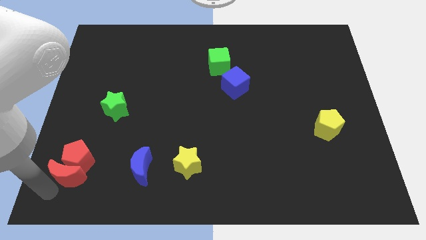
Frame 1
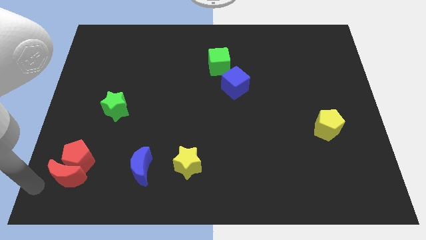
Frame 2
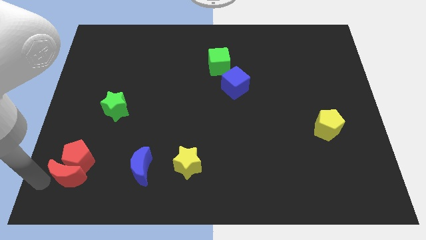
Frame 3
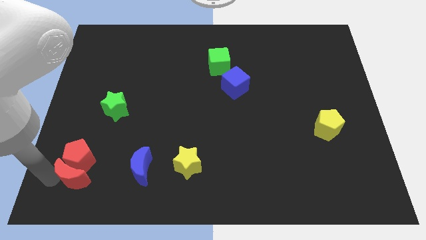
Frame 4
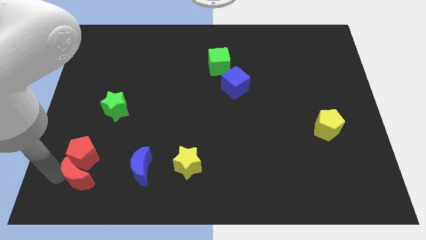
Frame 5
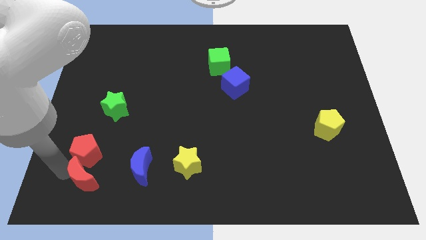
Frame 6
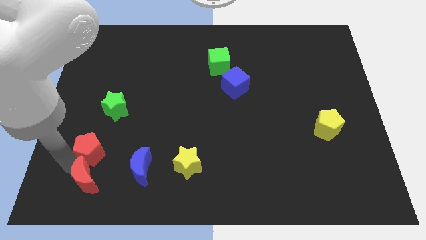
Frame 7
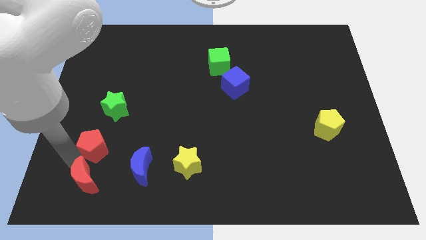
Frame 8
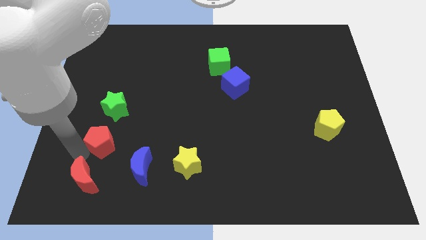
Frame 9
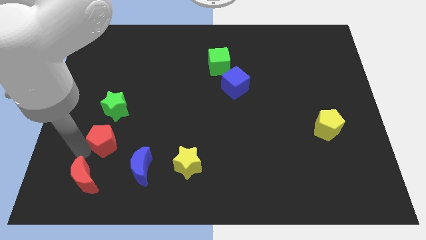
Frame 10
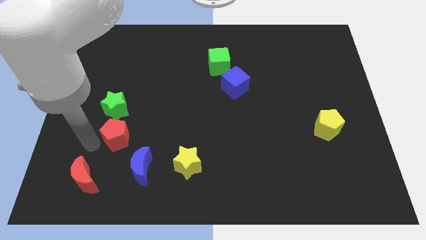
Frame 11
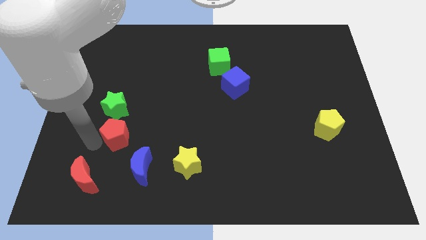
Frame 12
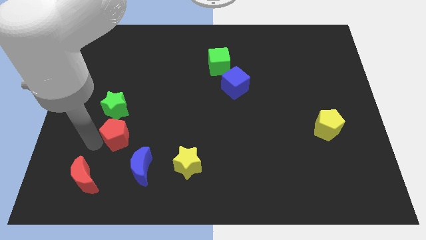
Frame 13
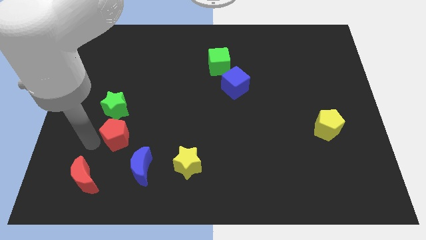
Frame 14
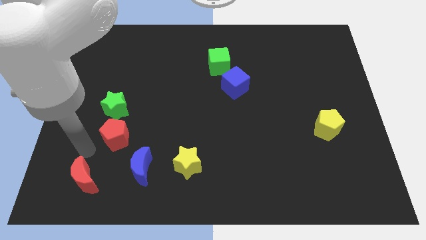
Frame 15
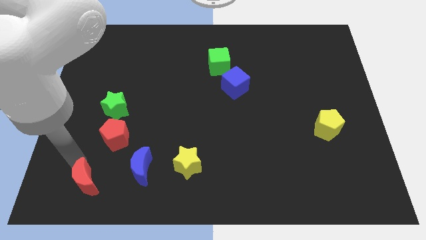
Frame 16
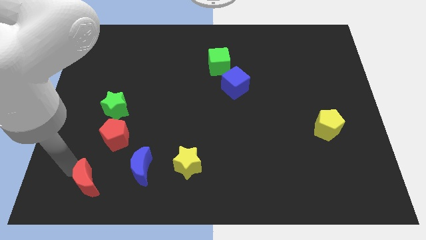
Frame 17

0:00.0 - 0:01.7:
place the red pentagon below the green star

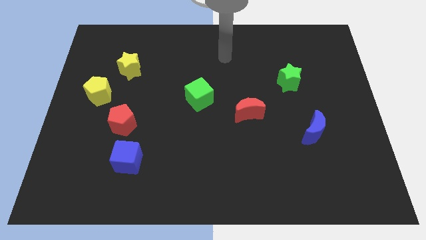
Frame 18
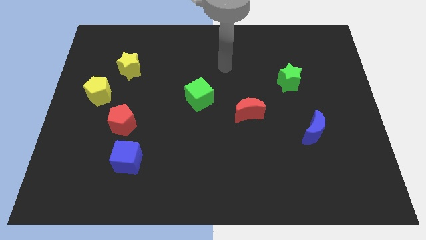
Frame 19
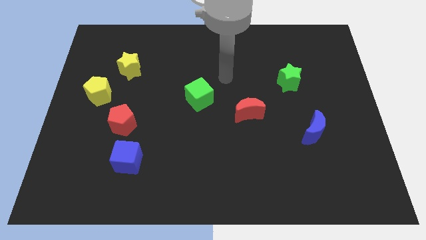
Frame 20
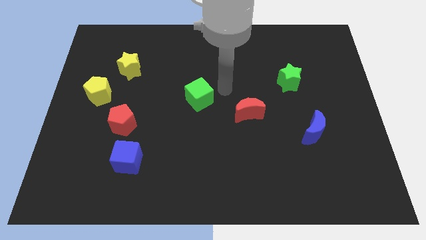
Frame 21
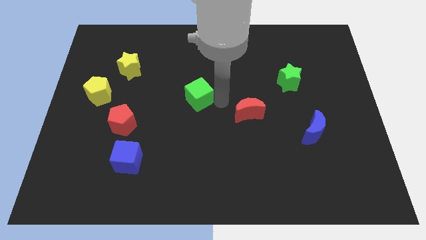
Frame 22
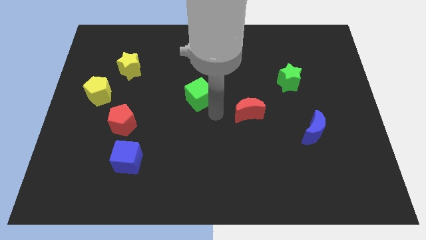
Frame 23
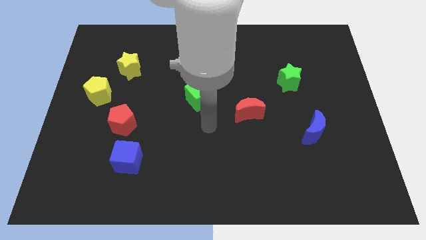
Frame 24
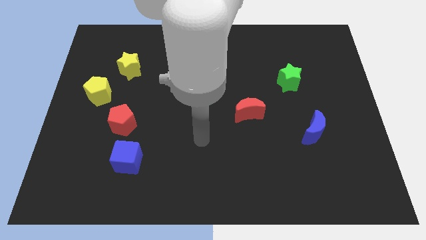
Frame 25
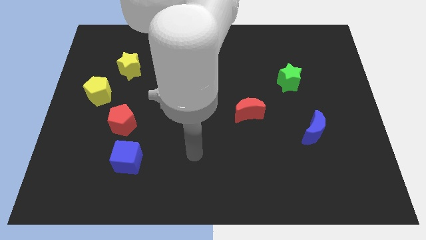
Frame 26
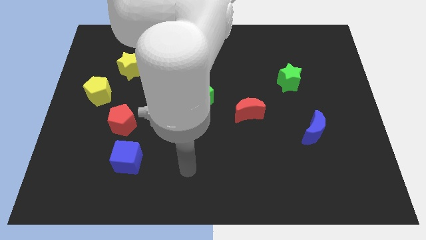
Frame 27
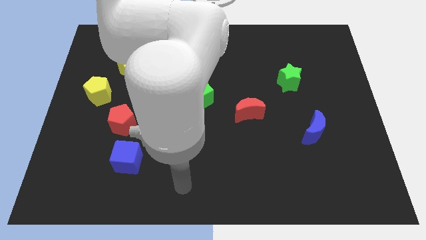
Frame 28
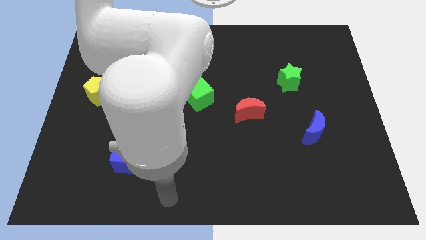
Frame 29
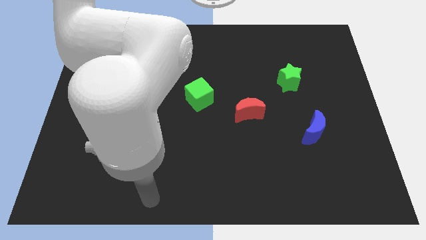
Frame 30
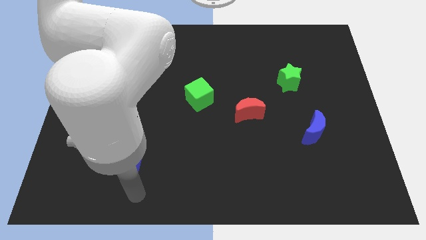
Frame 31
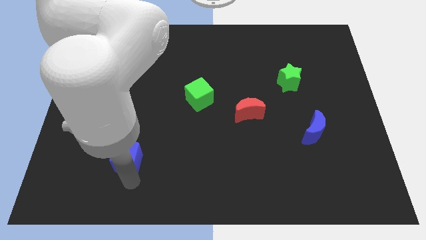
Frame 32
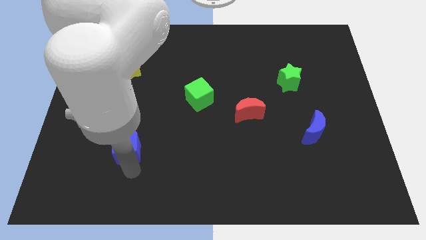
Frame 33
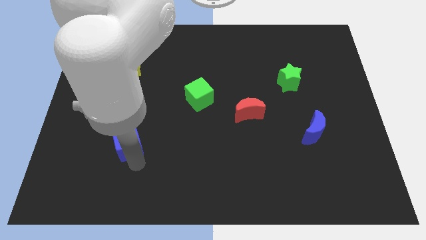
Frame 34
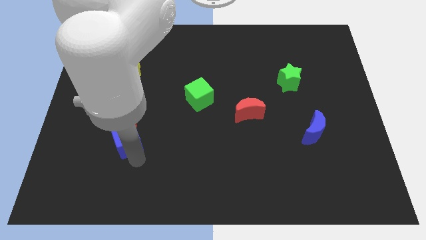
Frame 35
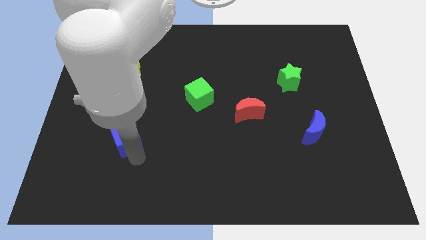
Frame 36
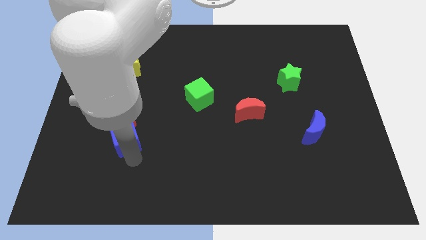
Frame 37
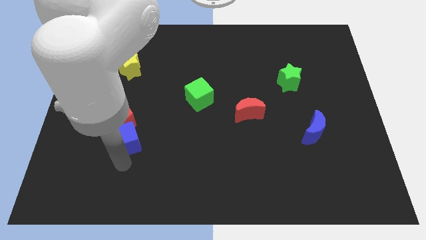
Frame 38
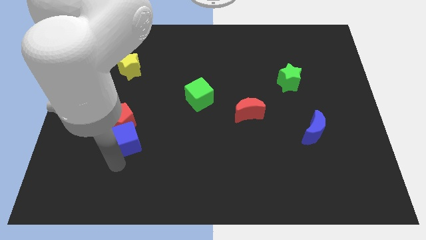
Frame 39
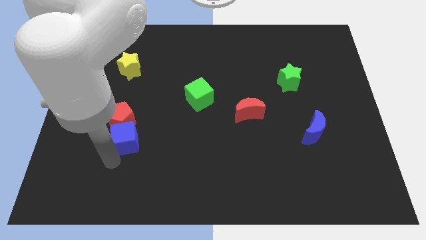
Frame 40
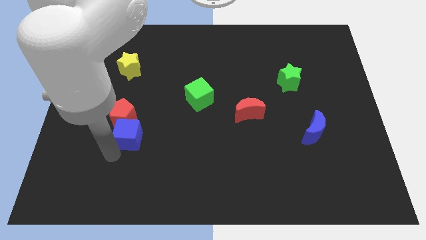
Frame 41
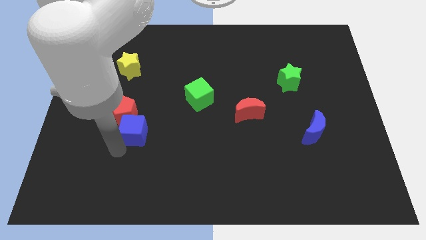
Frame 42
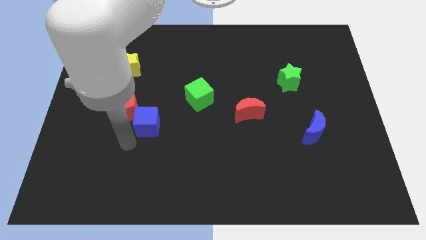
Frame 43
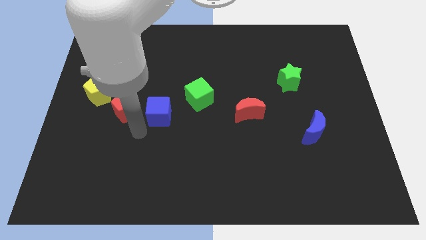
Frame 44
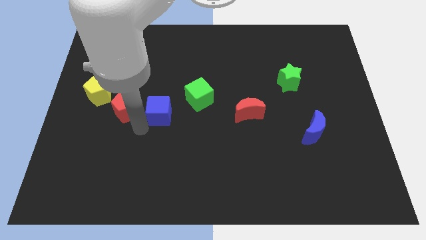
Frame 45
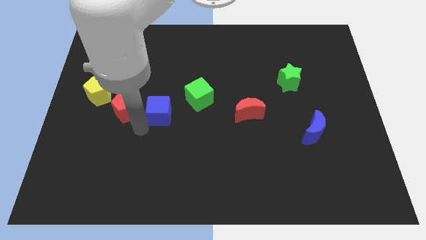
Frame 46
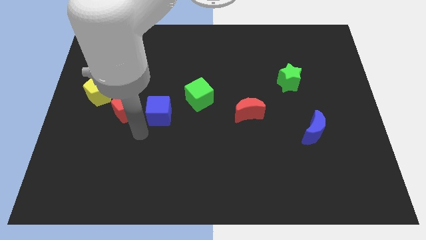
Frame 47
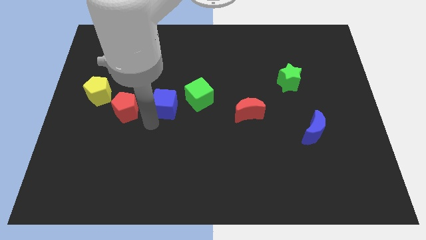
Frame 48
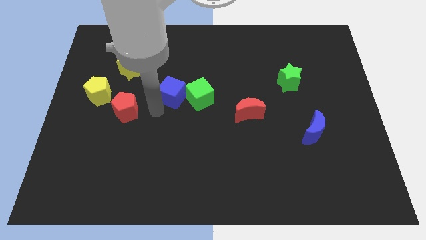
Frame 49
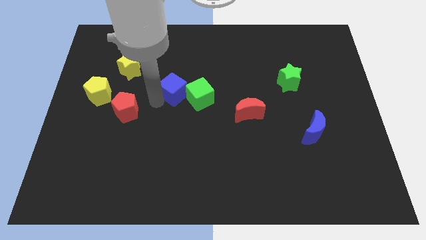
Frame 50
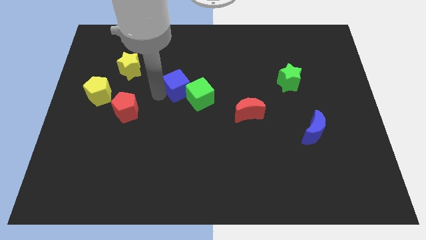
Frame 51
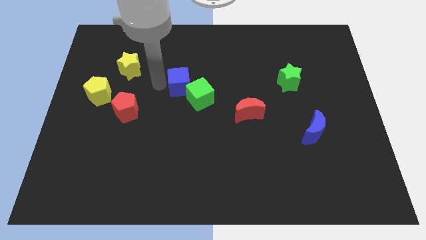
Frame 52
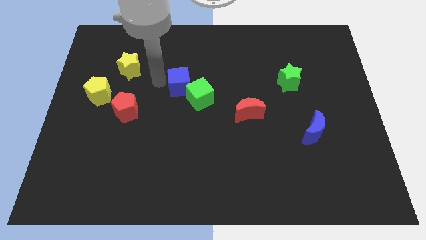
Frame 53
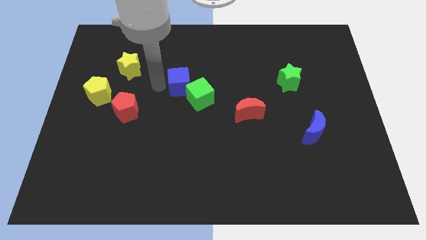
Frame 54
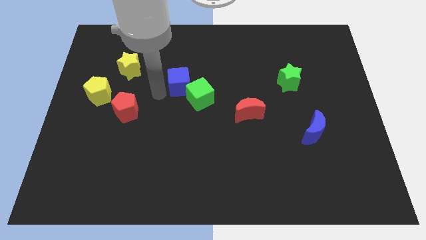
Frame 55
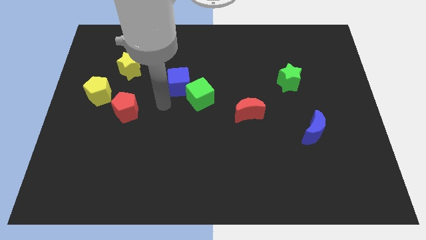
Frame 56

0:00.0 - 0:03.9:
drag blue moon near green cube

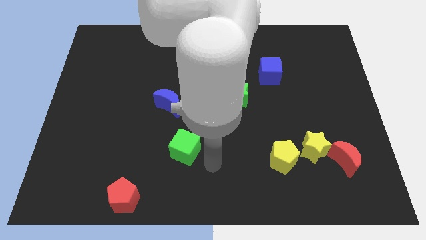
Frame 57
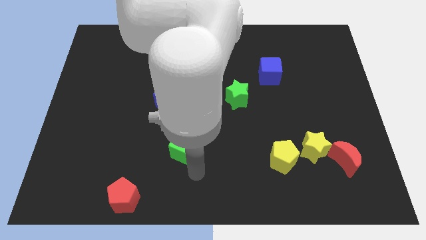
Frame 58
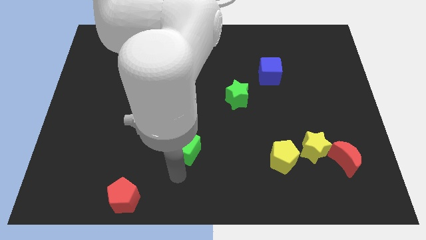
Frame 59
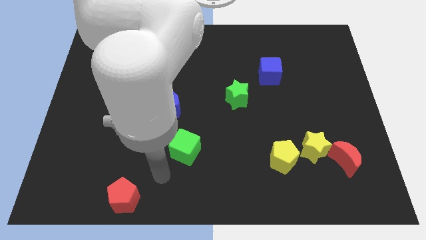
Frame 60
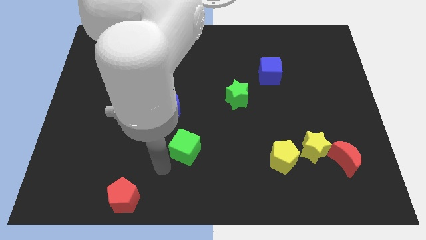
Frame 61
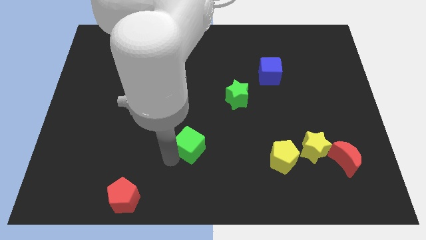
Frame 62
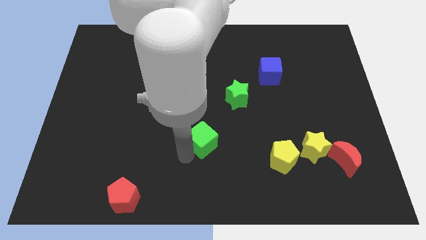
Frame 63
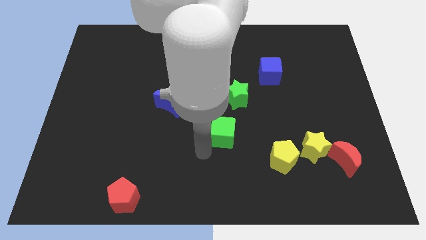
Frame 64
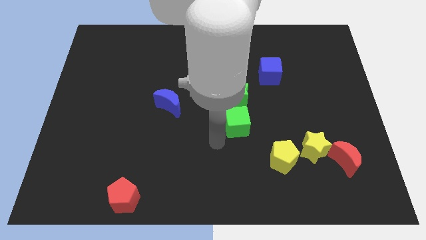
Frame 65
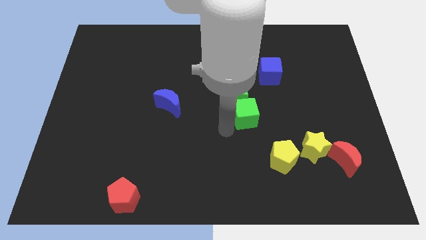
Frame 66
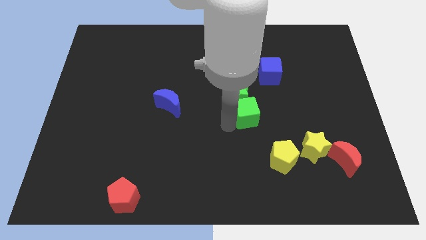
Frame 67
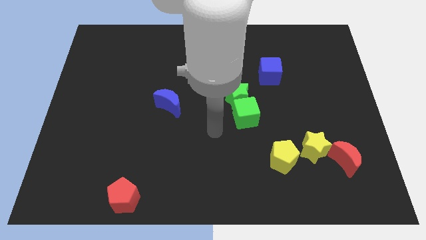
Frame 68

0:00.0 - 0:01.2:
move the green cube below the green star

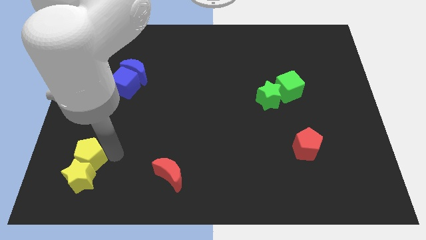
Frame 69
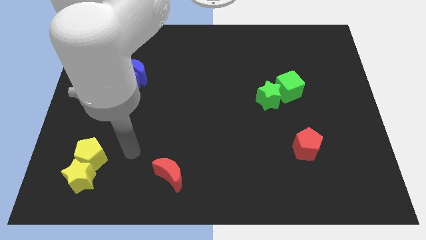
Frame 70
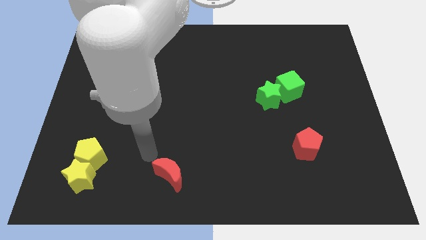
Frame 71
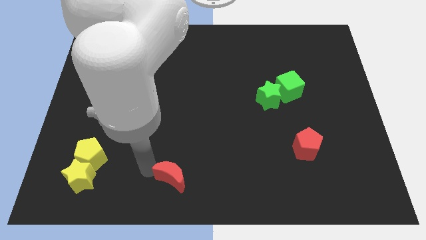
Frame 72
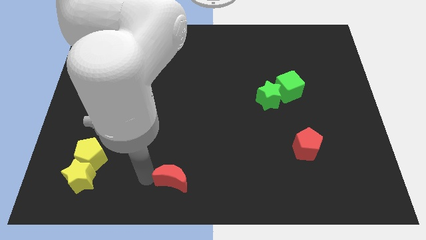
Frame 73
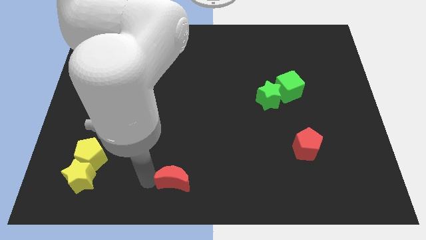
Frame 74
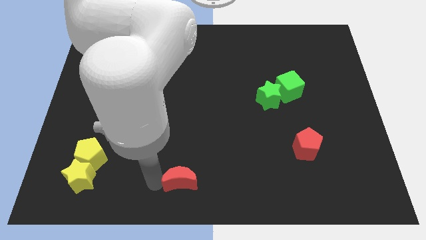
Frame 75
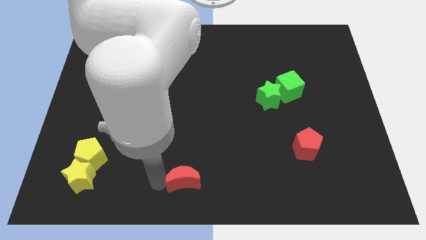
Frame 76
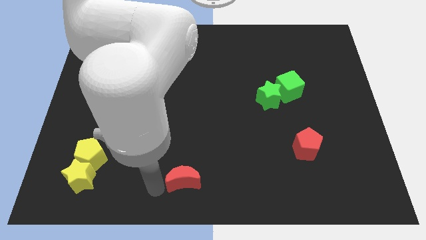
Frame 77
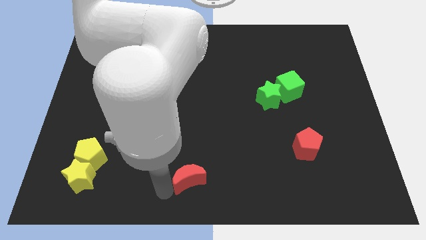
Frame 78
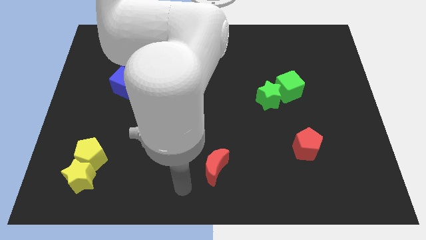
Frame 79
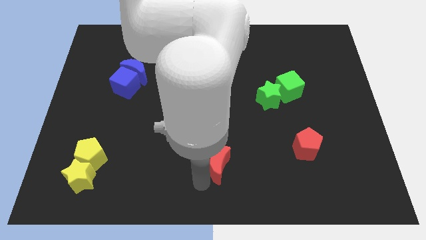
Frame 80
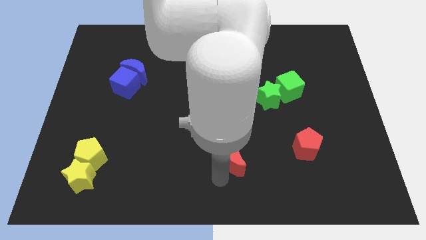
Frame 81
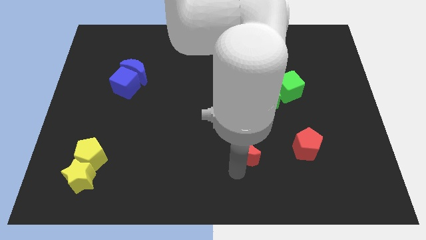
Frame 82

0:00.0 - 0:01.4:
drag the red moon towards the red pentagon

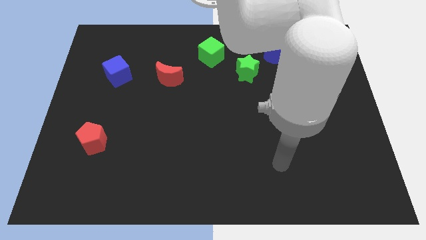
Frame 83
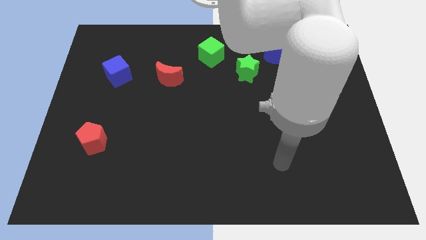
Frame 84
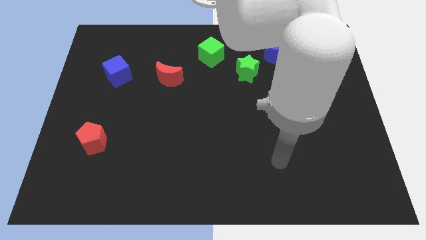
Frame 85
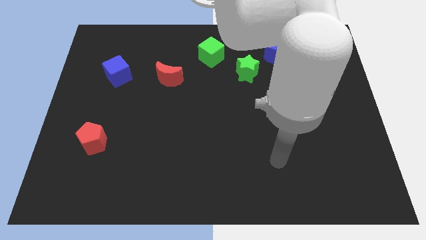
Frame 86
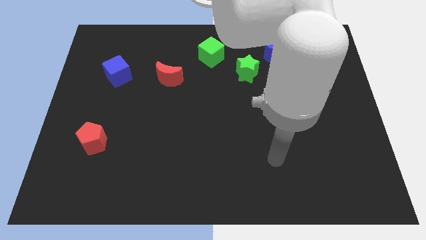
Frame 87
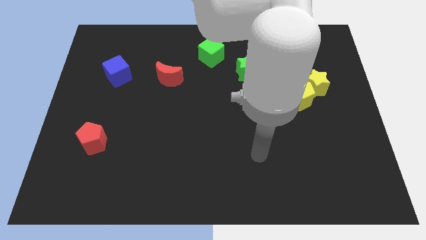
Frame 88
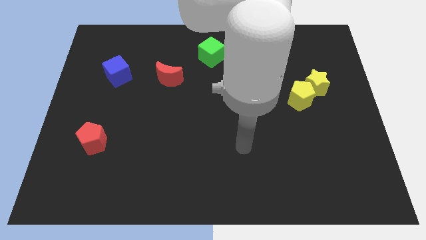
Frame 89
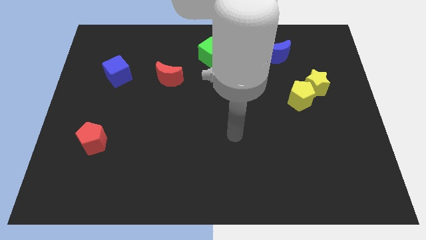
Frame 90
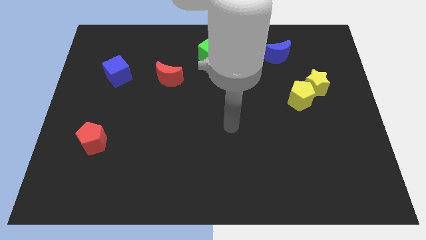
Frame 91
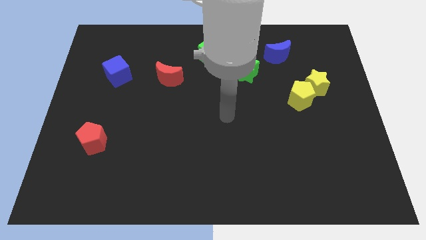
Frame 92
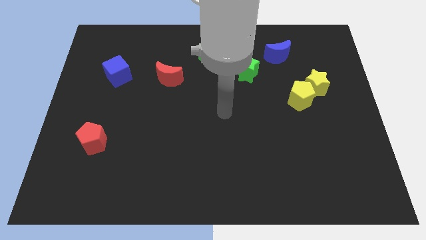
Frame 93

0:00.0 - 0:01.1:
put your hand at the center of the table
